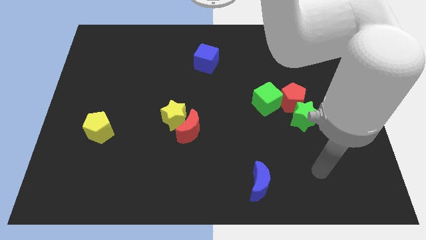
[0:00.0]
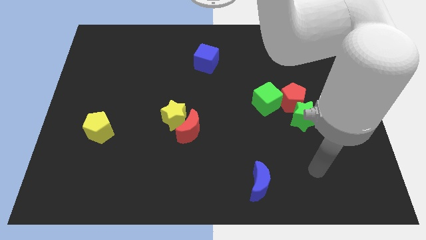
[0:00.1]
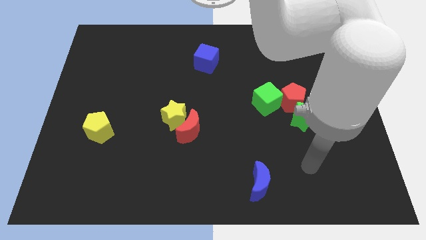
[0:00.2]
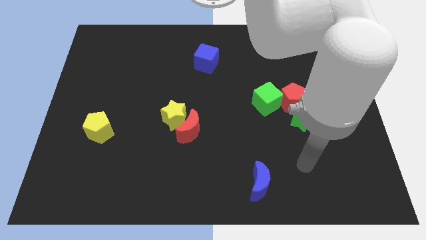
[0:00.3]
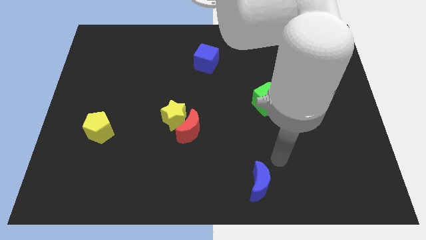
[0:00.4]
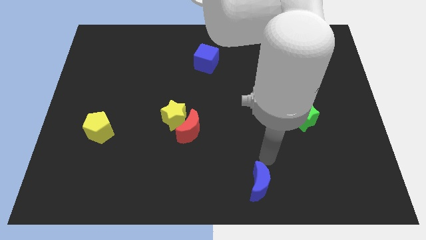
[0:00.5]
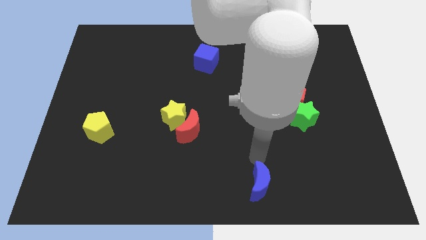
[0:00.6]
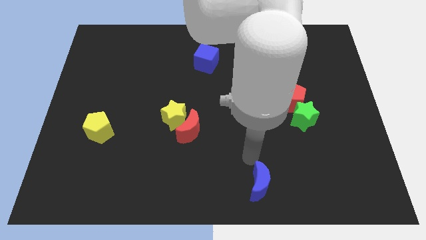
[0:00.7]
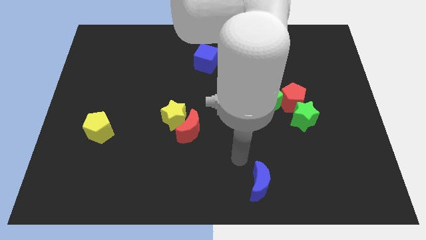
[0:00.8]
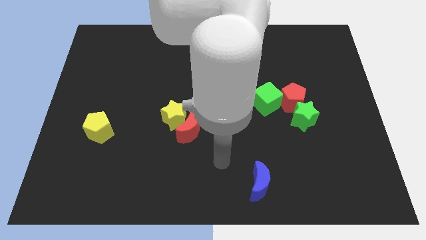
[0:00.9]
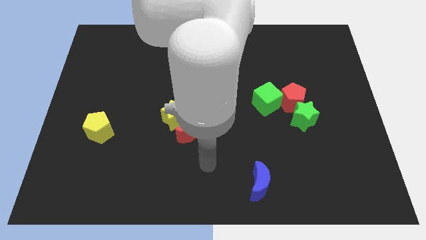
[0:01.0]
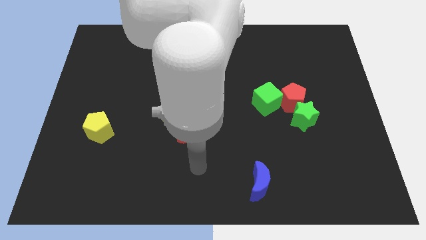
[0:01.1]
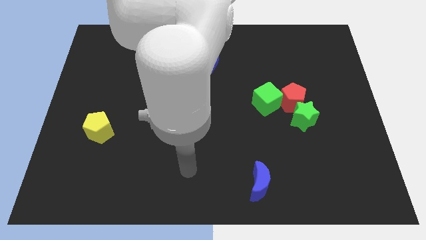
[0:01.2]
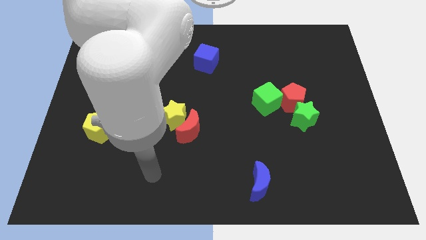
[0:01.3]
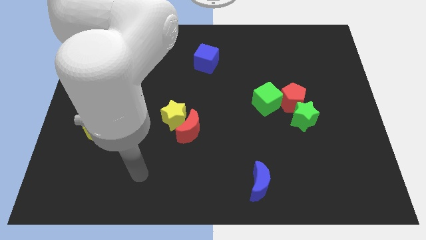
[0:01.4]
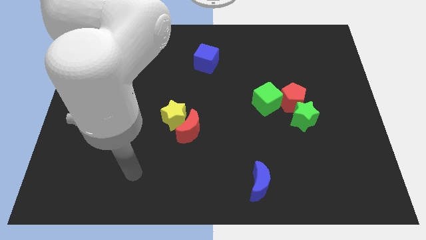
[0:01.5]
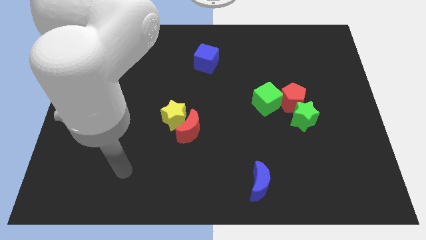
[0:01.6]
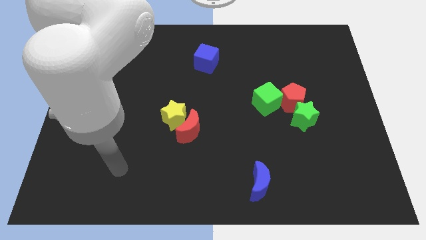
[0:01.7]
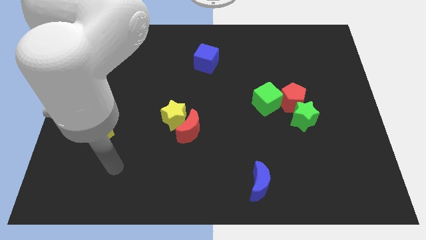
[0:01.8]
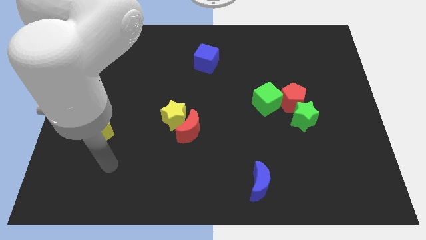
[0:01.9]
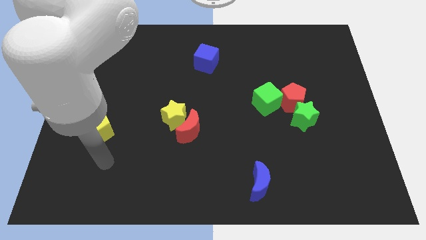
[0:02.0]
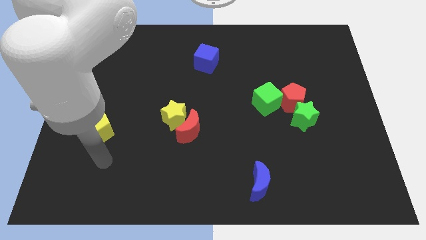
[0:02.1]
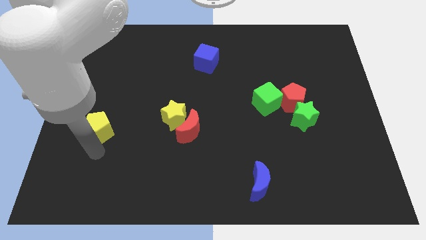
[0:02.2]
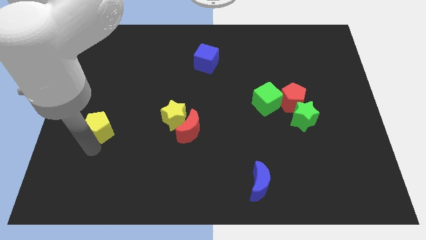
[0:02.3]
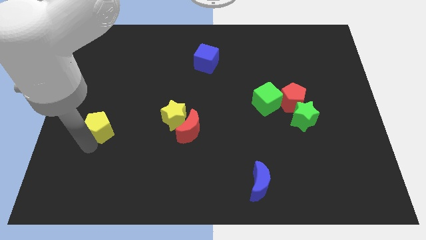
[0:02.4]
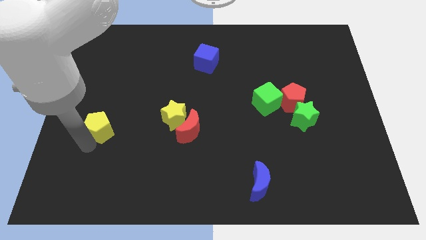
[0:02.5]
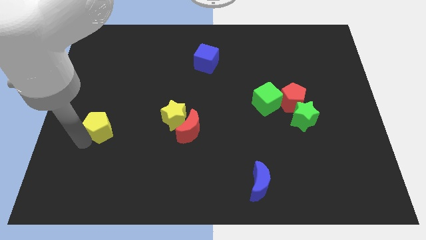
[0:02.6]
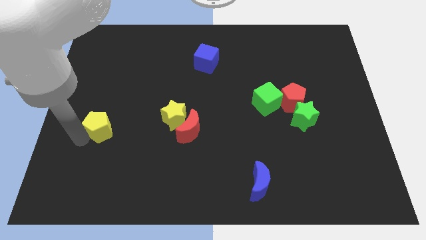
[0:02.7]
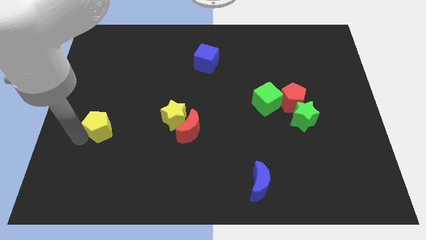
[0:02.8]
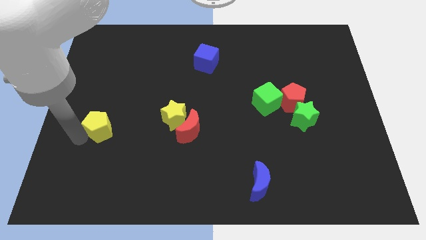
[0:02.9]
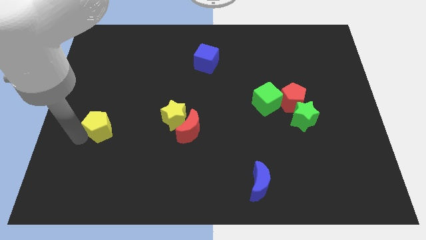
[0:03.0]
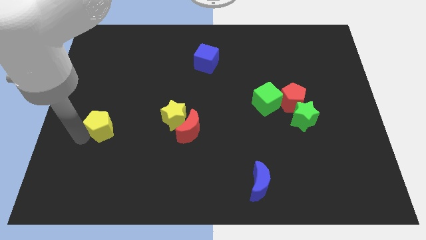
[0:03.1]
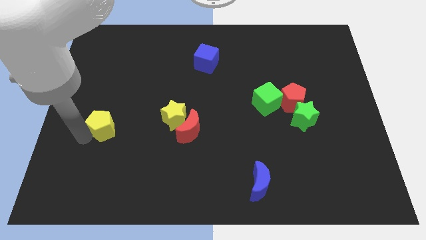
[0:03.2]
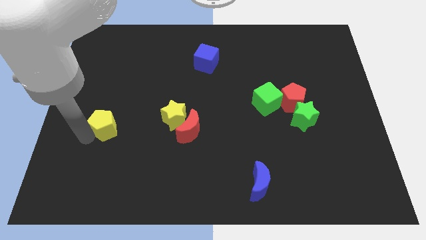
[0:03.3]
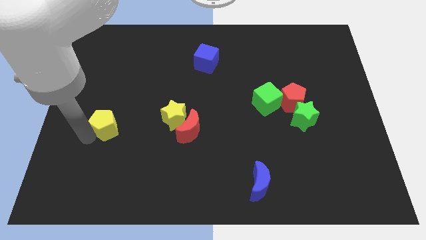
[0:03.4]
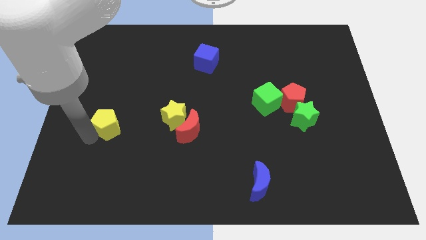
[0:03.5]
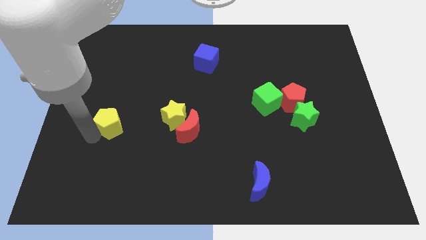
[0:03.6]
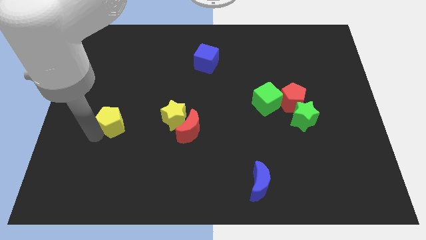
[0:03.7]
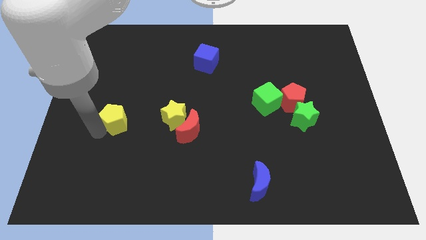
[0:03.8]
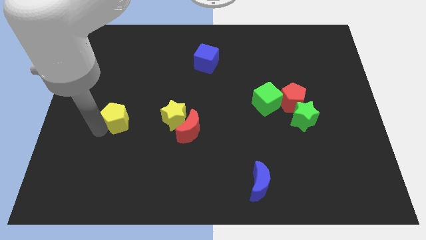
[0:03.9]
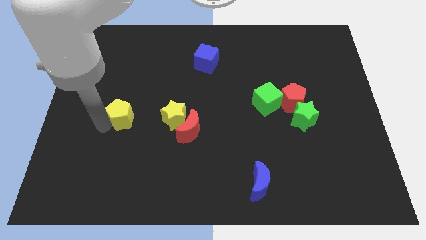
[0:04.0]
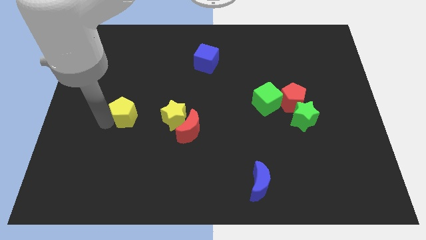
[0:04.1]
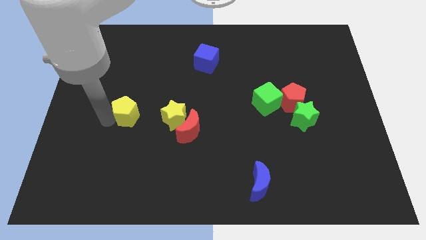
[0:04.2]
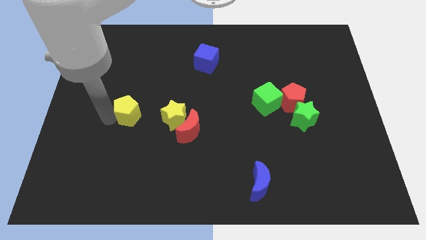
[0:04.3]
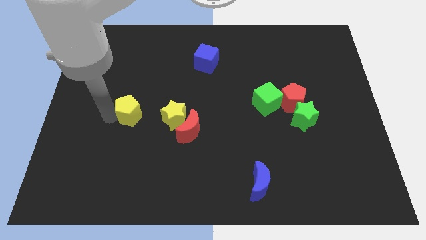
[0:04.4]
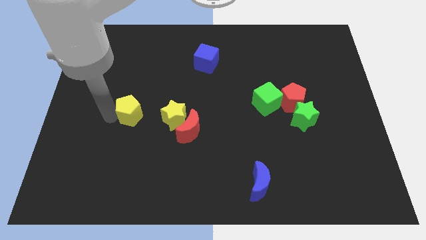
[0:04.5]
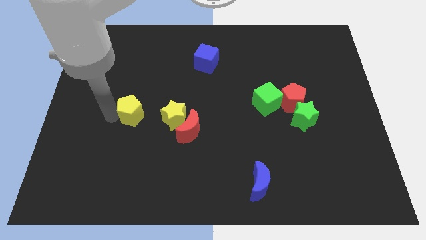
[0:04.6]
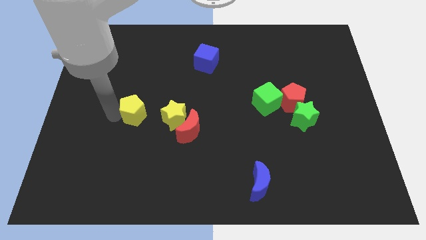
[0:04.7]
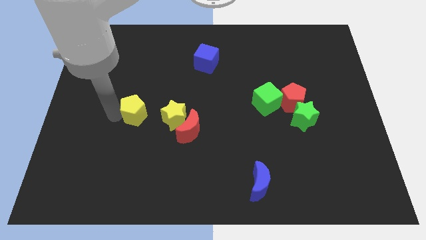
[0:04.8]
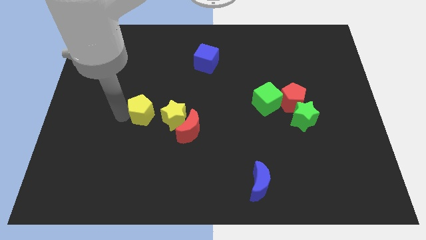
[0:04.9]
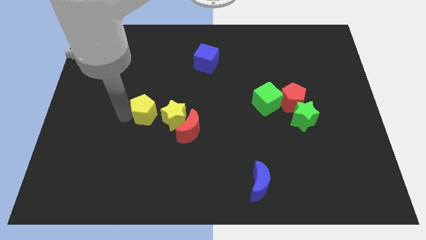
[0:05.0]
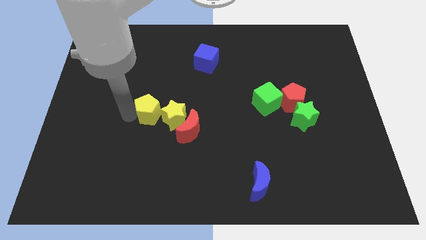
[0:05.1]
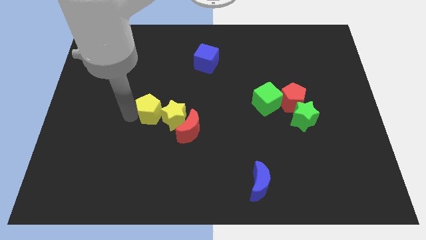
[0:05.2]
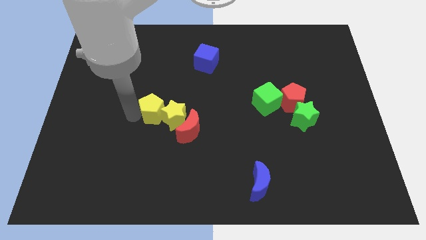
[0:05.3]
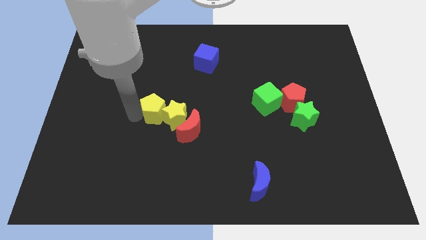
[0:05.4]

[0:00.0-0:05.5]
put the yellow pentagon to the yellow star

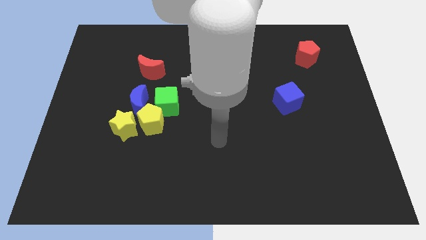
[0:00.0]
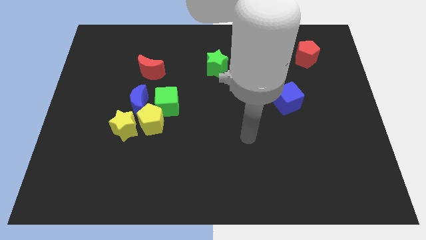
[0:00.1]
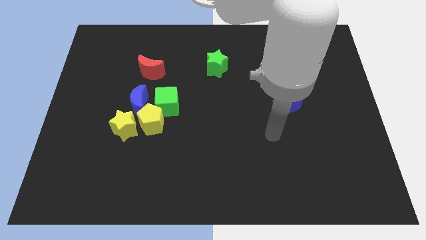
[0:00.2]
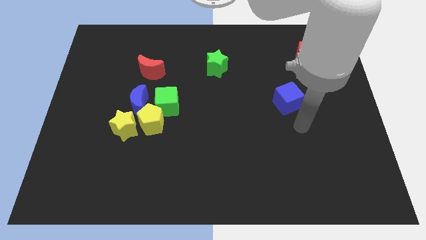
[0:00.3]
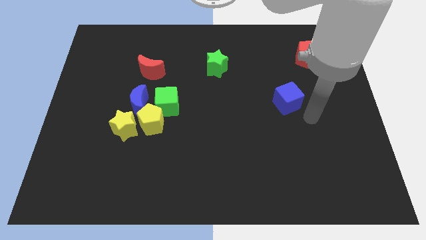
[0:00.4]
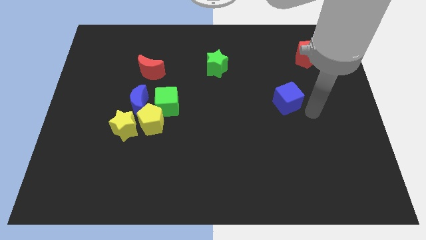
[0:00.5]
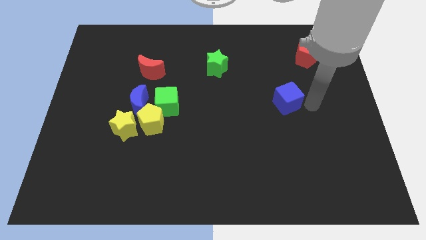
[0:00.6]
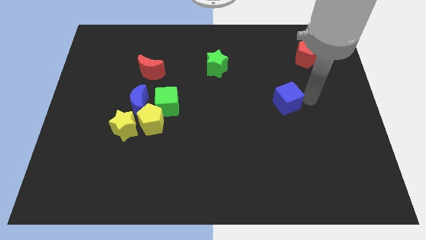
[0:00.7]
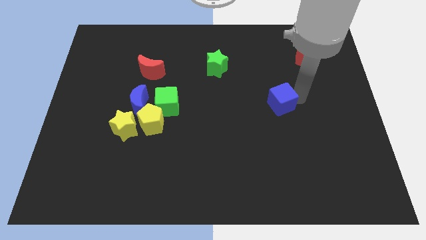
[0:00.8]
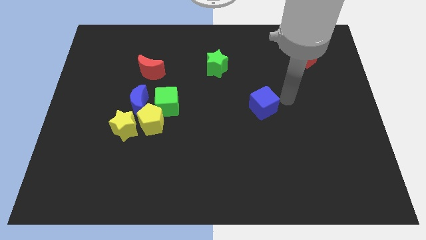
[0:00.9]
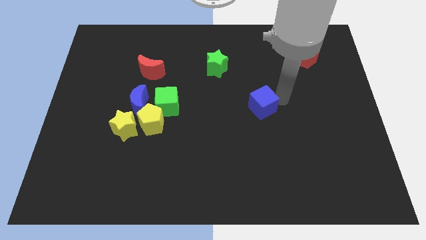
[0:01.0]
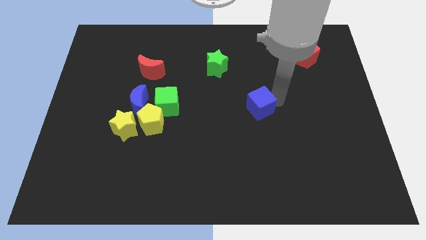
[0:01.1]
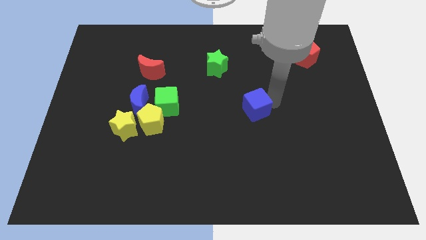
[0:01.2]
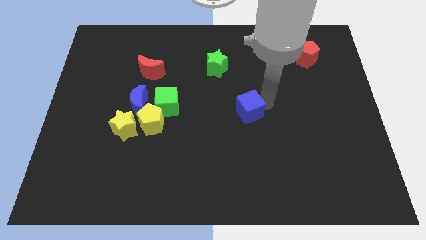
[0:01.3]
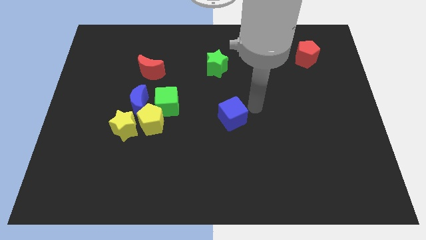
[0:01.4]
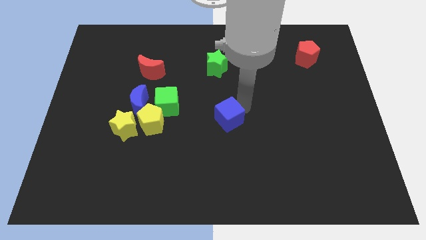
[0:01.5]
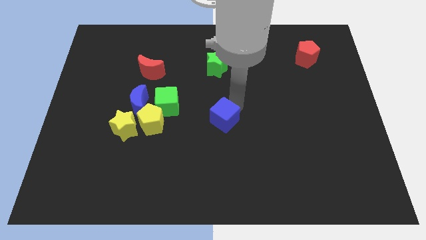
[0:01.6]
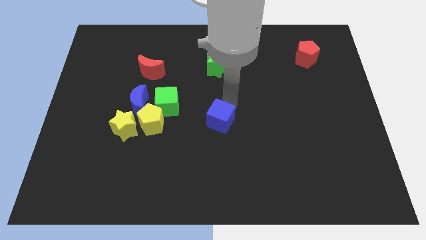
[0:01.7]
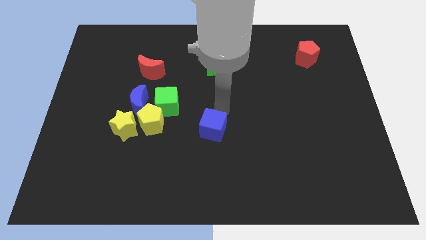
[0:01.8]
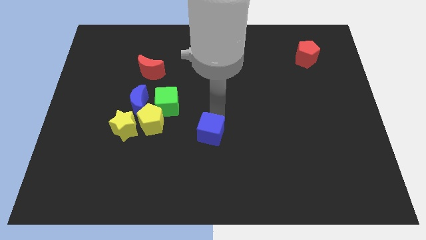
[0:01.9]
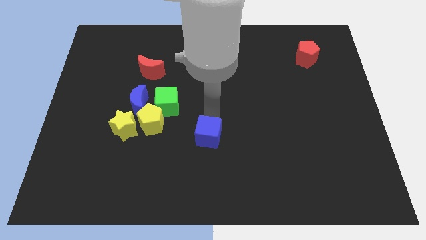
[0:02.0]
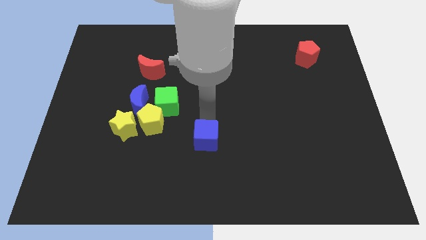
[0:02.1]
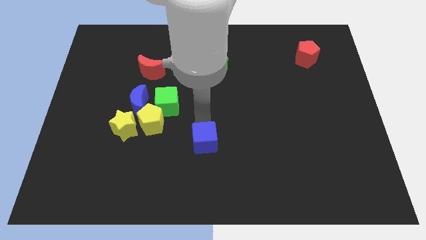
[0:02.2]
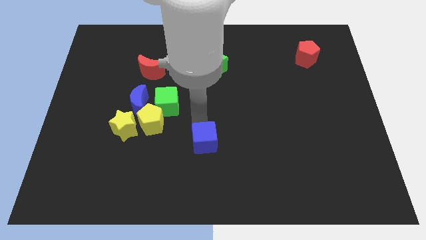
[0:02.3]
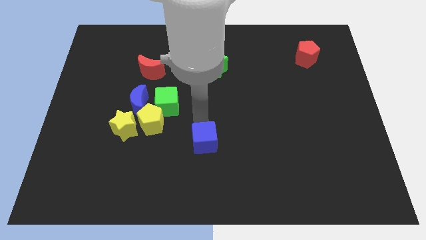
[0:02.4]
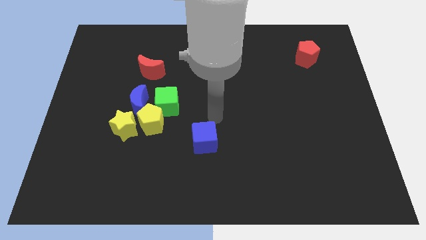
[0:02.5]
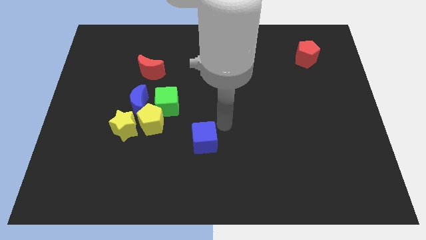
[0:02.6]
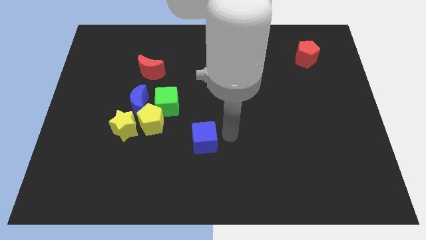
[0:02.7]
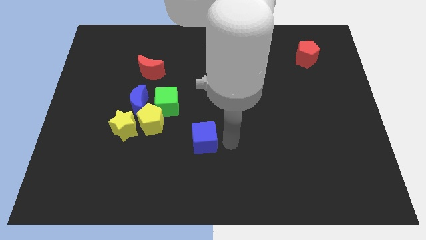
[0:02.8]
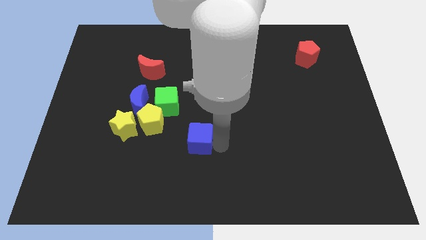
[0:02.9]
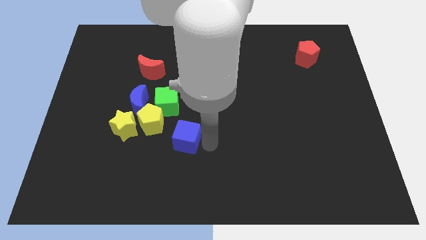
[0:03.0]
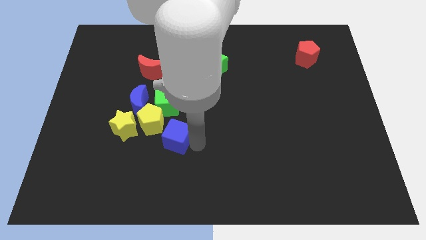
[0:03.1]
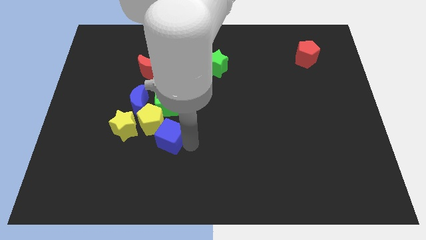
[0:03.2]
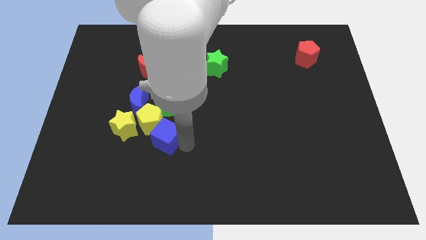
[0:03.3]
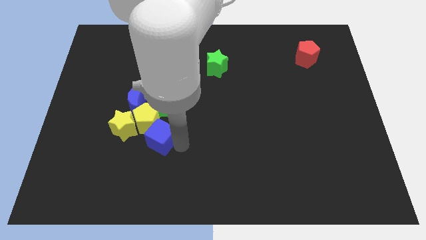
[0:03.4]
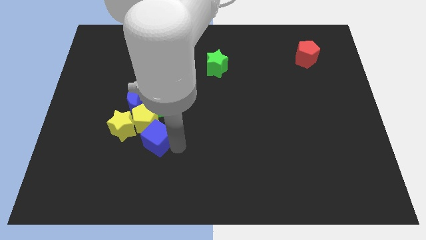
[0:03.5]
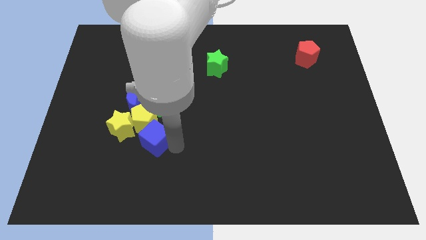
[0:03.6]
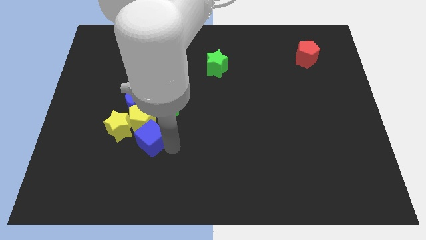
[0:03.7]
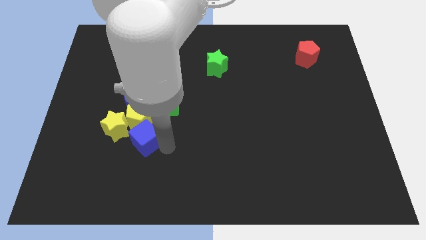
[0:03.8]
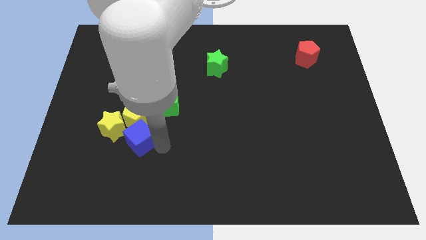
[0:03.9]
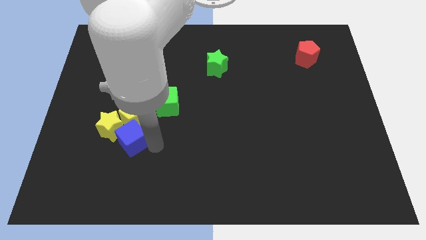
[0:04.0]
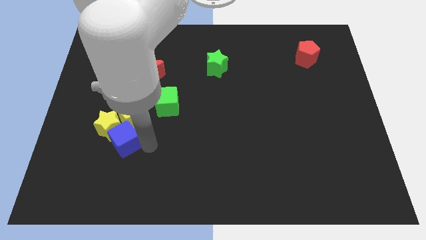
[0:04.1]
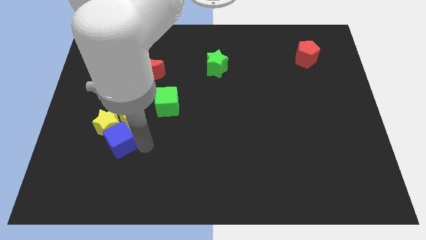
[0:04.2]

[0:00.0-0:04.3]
move the blue cube to the yellow star
